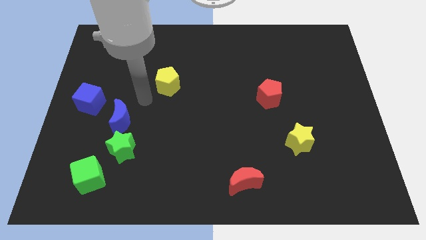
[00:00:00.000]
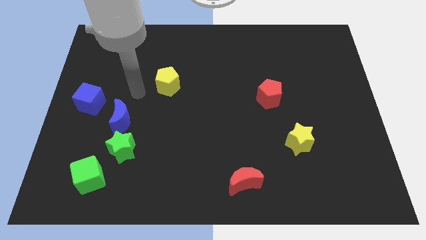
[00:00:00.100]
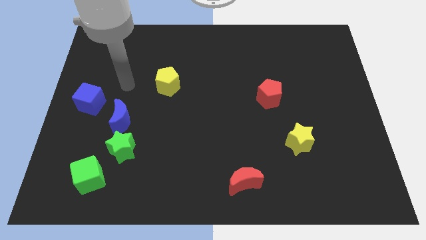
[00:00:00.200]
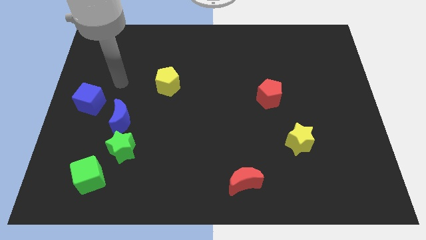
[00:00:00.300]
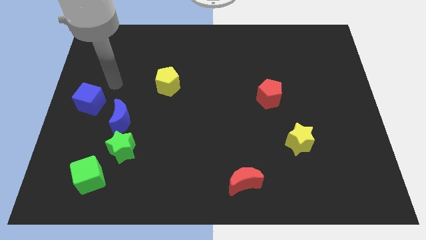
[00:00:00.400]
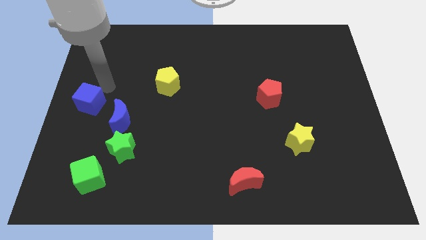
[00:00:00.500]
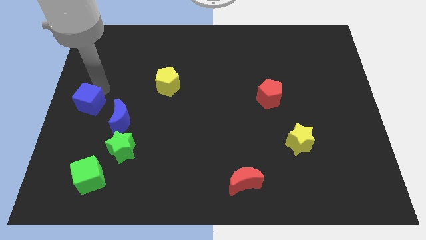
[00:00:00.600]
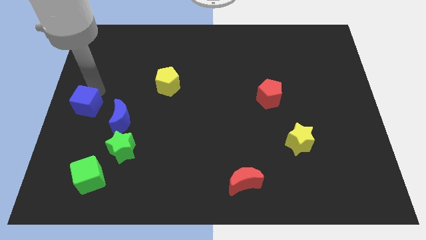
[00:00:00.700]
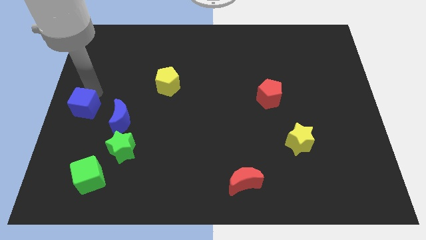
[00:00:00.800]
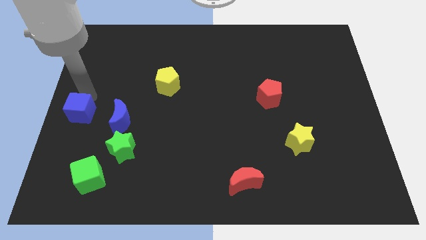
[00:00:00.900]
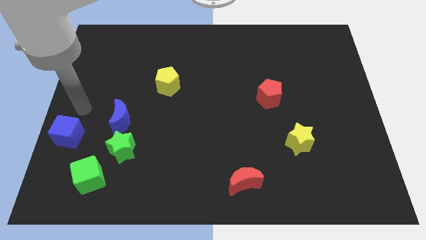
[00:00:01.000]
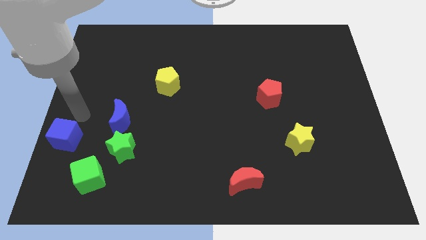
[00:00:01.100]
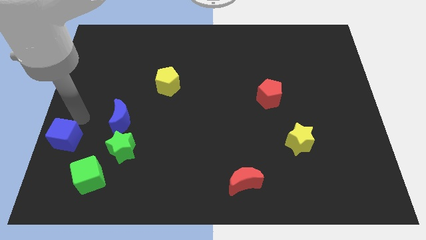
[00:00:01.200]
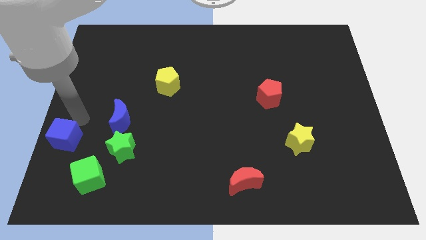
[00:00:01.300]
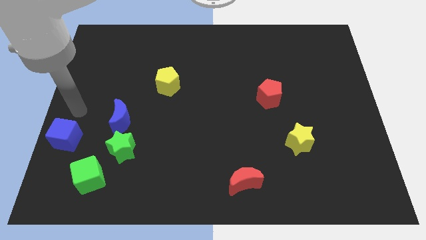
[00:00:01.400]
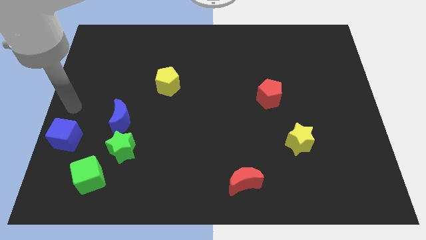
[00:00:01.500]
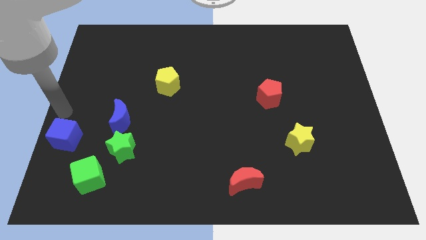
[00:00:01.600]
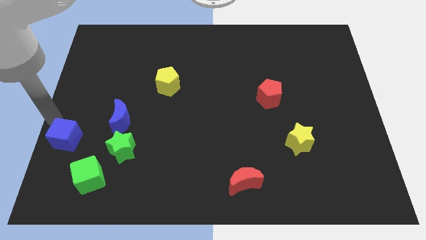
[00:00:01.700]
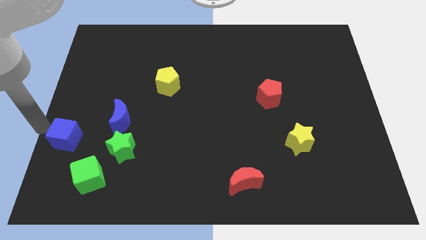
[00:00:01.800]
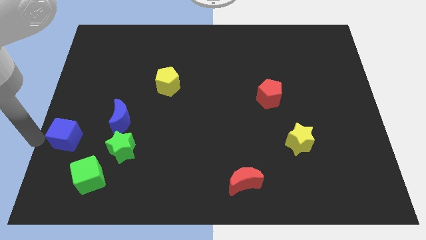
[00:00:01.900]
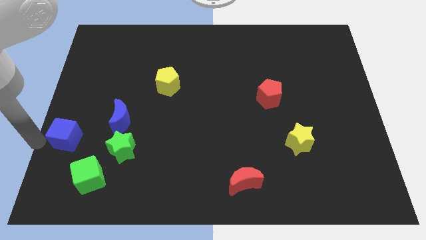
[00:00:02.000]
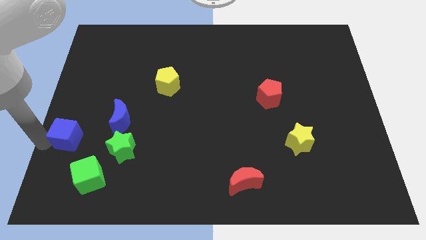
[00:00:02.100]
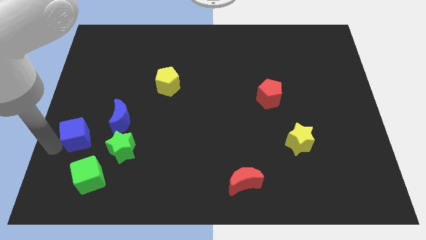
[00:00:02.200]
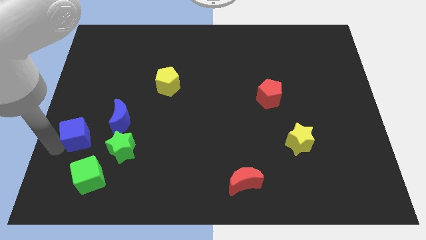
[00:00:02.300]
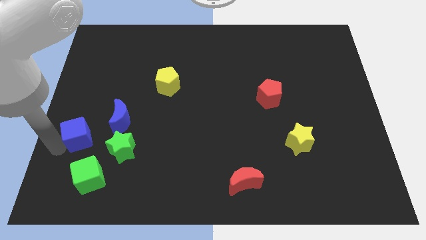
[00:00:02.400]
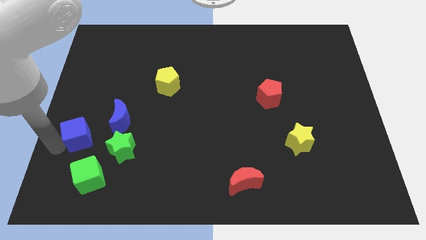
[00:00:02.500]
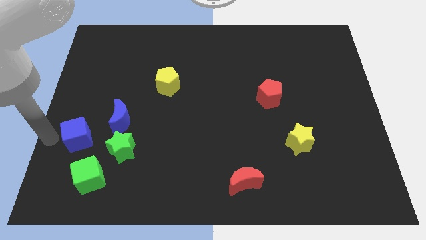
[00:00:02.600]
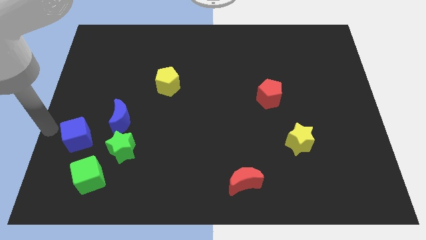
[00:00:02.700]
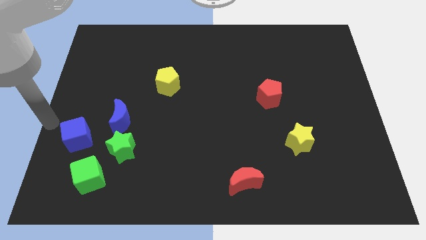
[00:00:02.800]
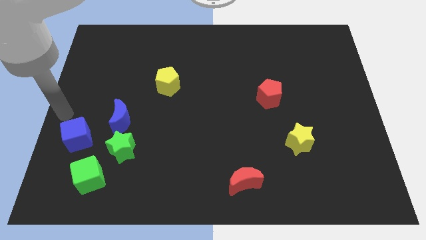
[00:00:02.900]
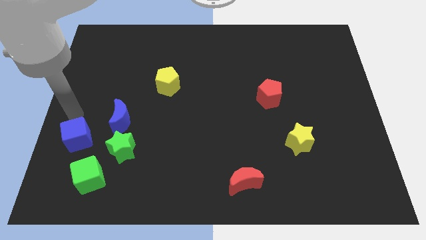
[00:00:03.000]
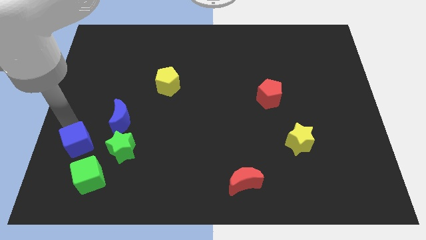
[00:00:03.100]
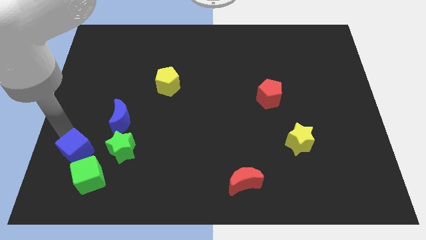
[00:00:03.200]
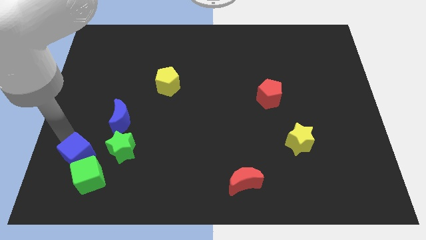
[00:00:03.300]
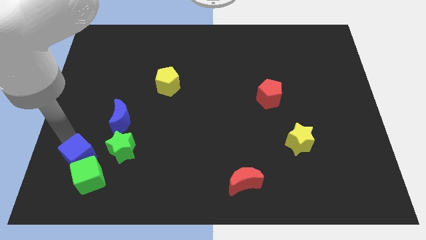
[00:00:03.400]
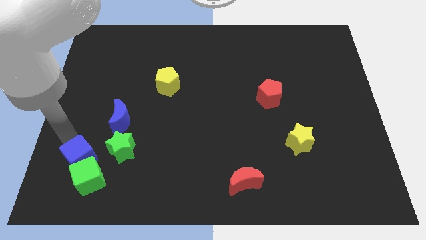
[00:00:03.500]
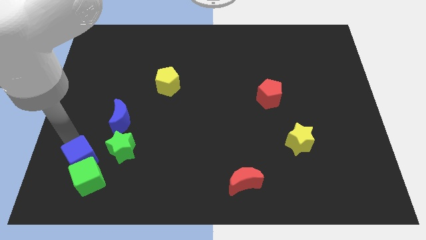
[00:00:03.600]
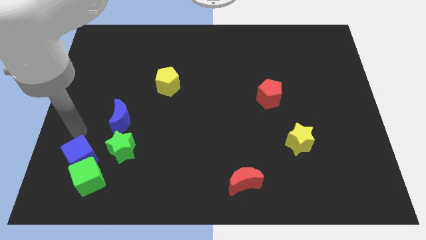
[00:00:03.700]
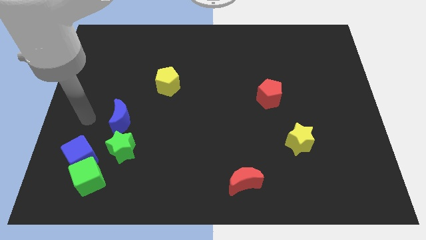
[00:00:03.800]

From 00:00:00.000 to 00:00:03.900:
push the blue cube into the green cube

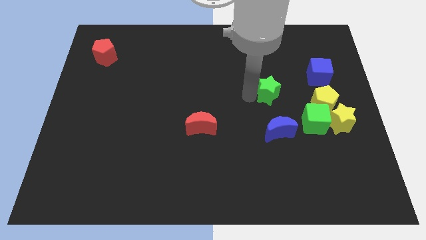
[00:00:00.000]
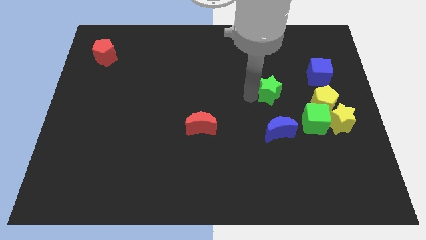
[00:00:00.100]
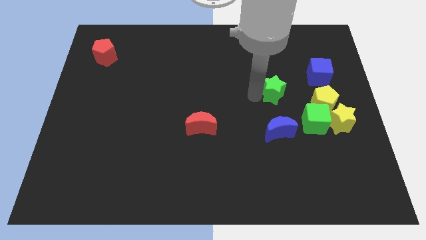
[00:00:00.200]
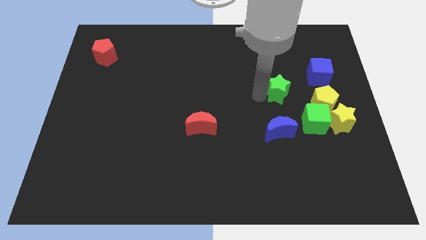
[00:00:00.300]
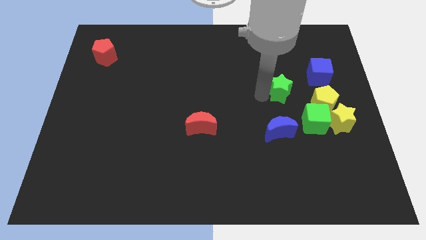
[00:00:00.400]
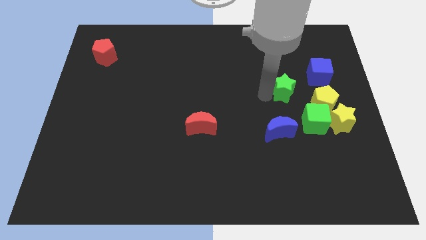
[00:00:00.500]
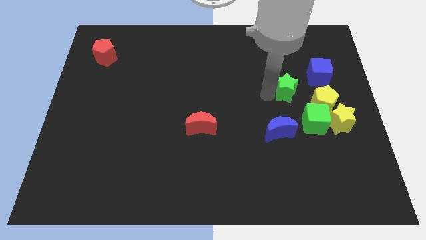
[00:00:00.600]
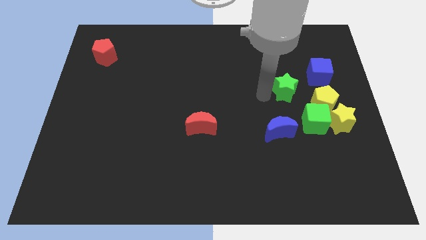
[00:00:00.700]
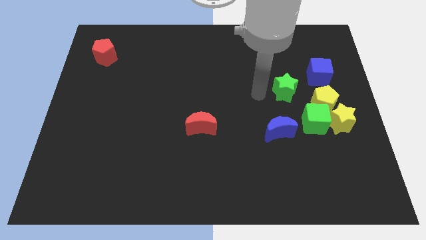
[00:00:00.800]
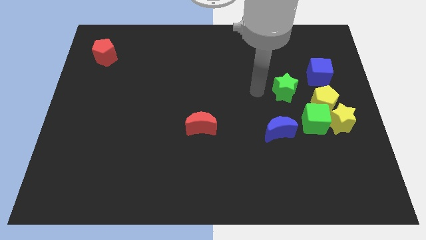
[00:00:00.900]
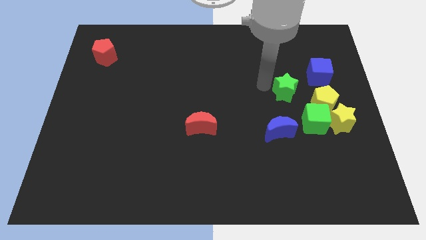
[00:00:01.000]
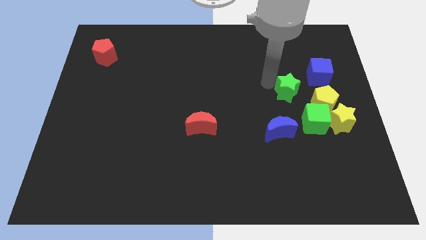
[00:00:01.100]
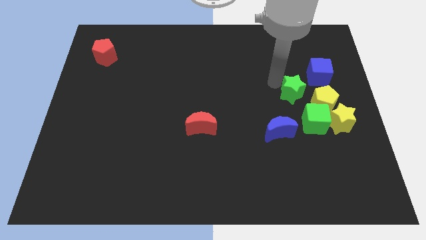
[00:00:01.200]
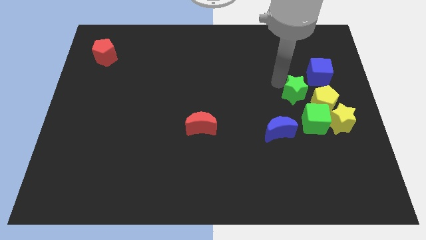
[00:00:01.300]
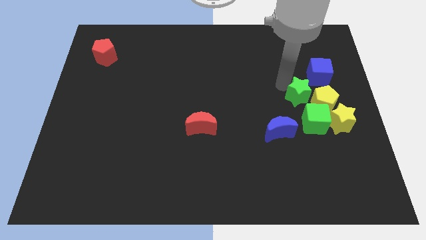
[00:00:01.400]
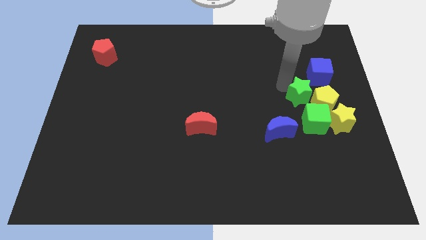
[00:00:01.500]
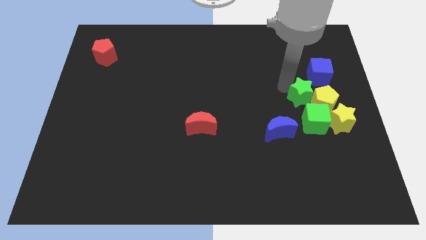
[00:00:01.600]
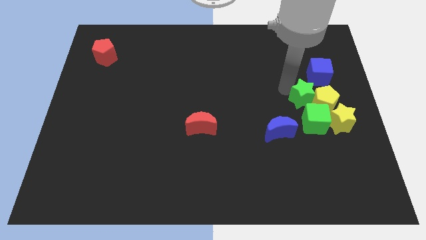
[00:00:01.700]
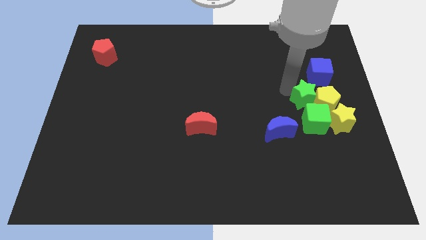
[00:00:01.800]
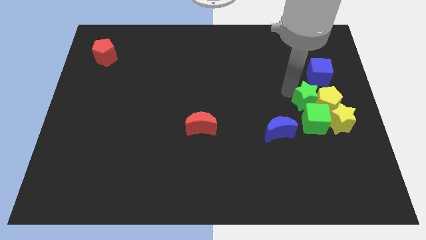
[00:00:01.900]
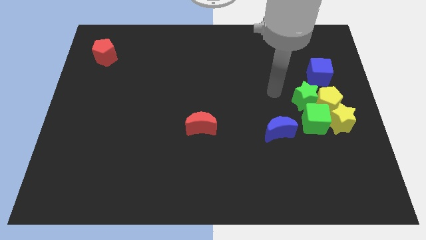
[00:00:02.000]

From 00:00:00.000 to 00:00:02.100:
push the green star into the yellow pentagon

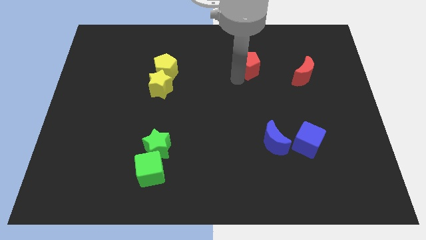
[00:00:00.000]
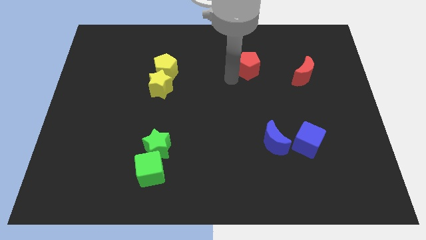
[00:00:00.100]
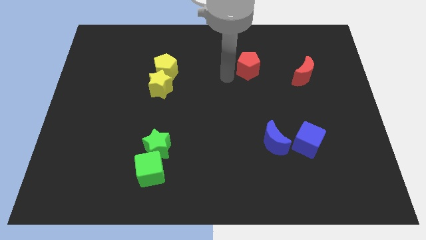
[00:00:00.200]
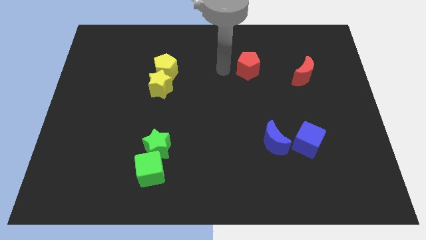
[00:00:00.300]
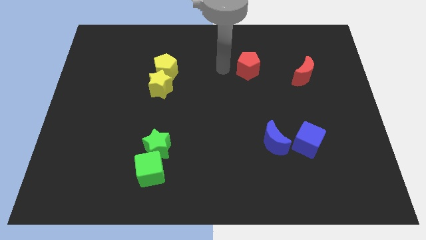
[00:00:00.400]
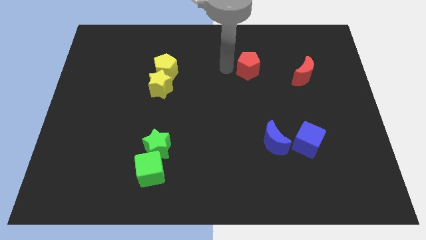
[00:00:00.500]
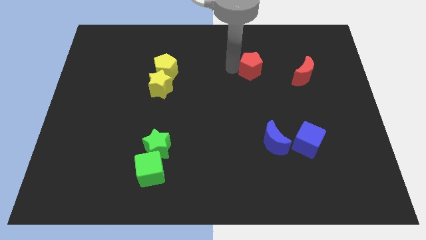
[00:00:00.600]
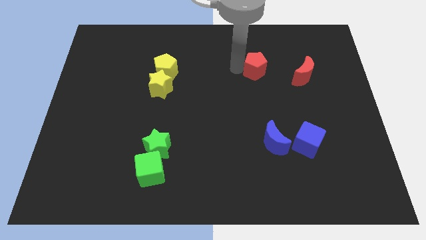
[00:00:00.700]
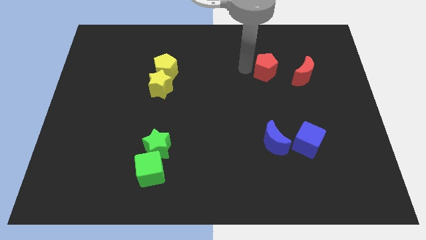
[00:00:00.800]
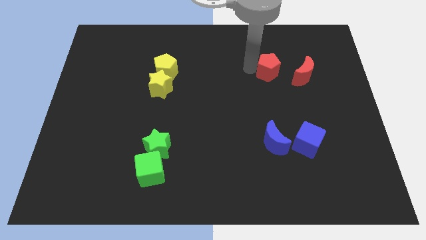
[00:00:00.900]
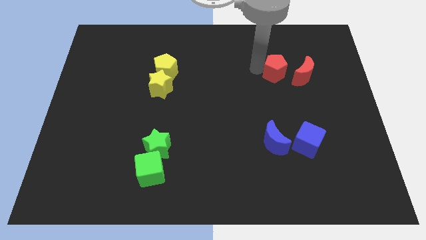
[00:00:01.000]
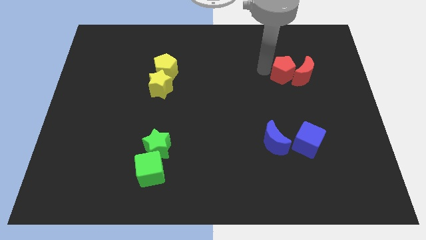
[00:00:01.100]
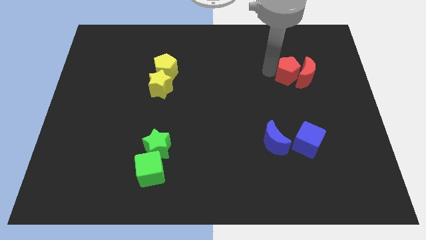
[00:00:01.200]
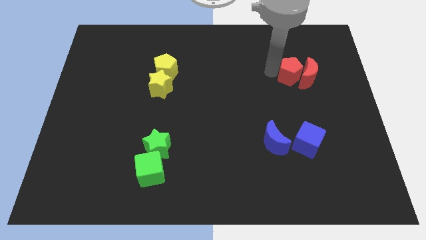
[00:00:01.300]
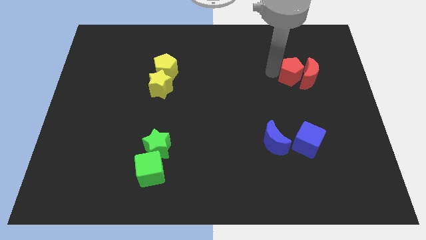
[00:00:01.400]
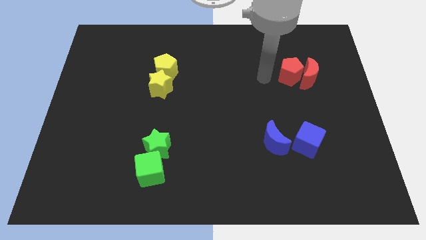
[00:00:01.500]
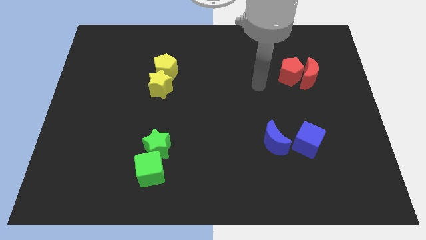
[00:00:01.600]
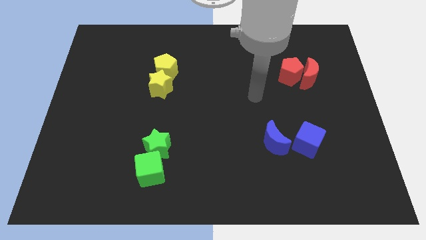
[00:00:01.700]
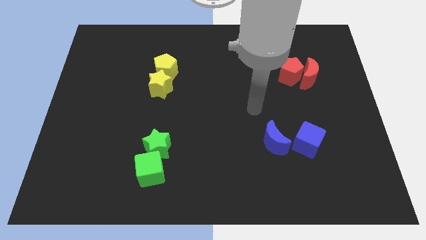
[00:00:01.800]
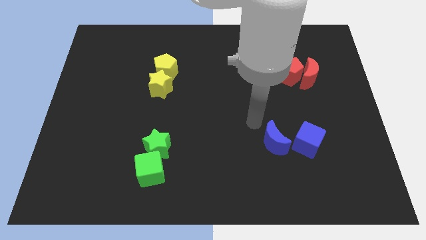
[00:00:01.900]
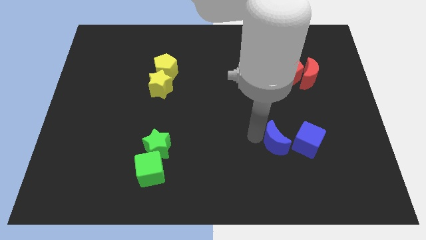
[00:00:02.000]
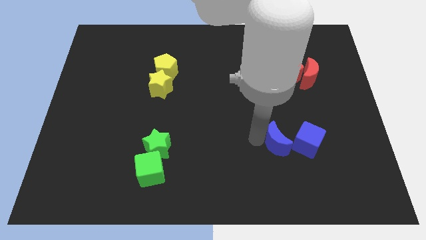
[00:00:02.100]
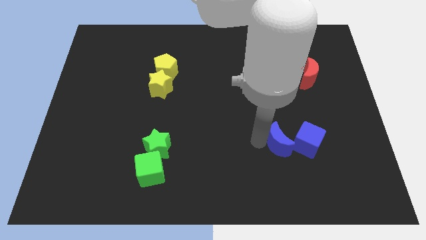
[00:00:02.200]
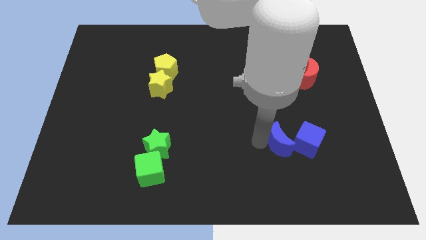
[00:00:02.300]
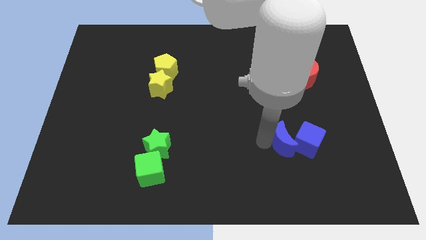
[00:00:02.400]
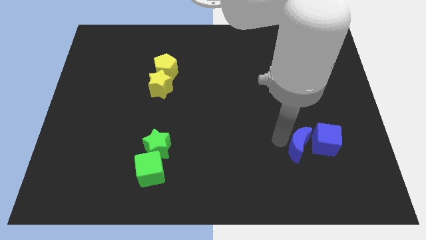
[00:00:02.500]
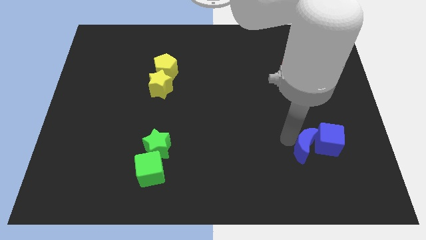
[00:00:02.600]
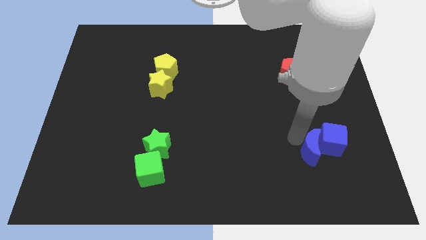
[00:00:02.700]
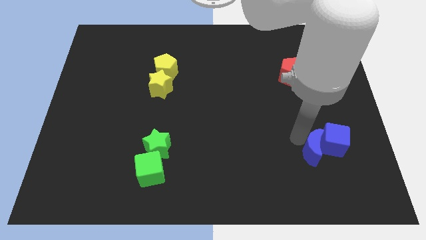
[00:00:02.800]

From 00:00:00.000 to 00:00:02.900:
push blue crescent towards blue cube
